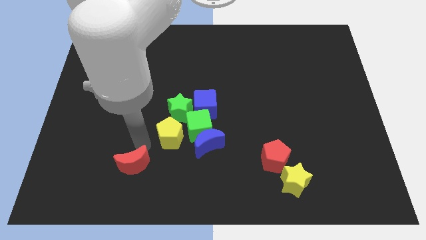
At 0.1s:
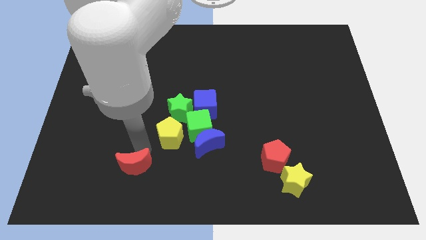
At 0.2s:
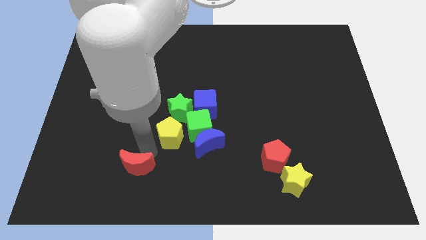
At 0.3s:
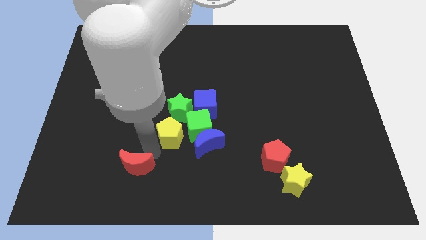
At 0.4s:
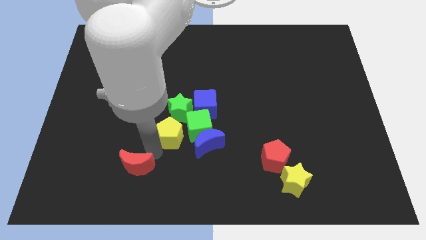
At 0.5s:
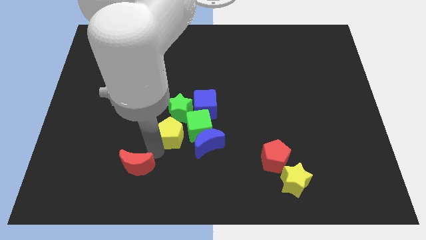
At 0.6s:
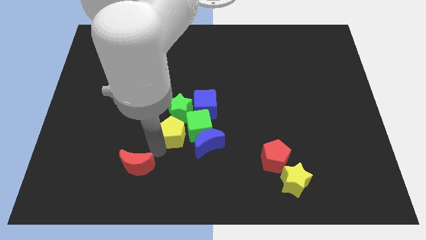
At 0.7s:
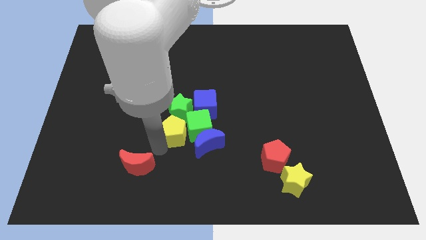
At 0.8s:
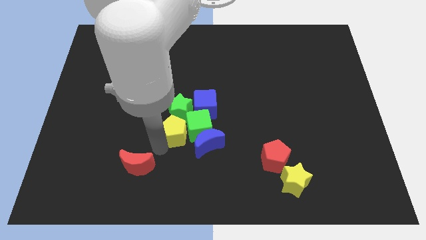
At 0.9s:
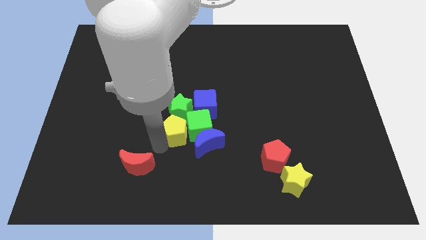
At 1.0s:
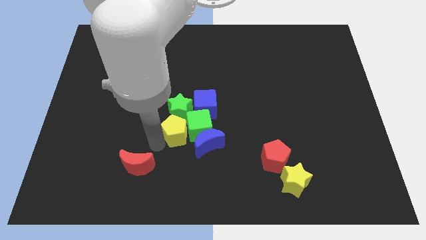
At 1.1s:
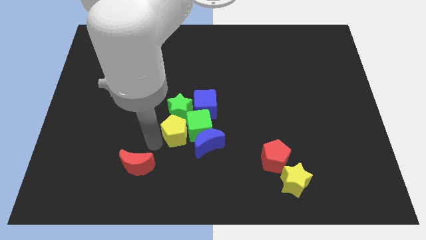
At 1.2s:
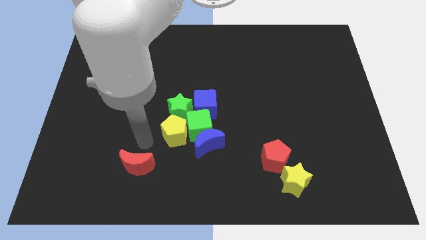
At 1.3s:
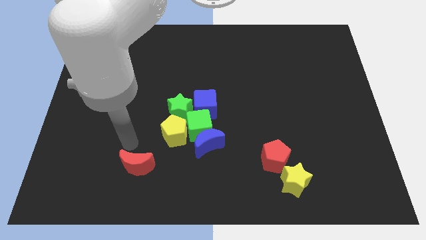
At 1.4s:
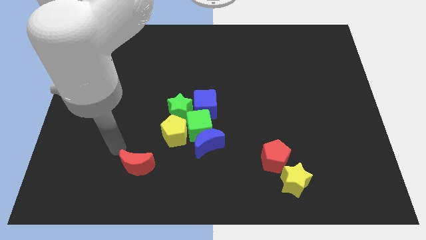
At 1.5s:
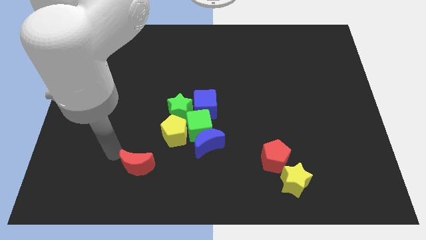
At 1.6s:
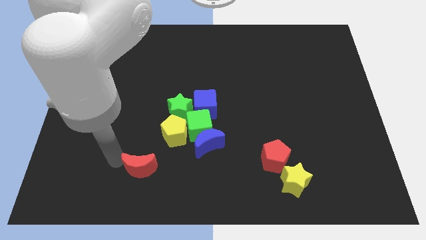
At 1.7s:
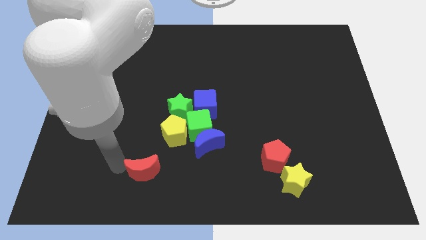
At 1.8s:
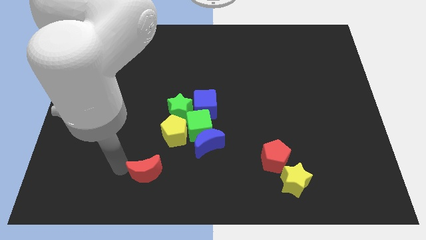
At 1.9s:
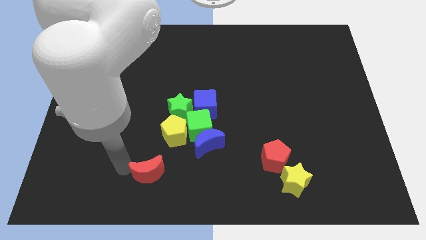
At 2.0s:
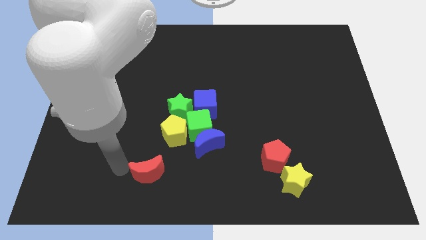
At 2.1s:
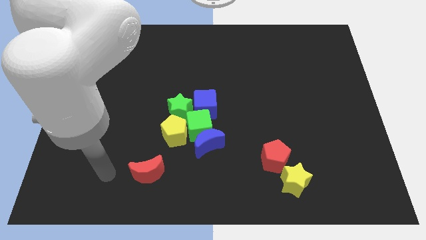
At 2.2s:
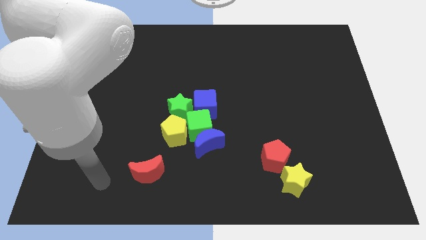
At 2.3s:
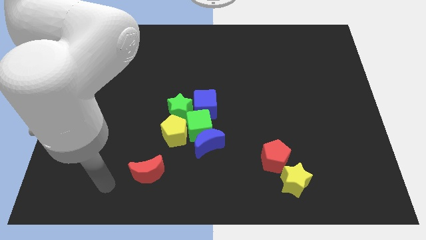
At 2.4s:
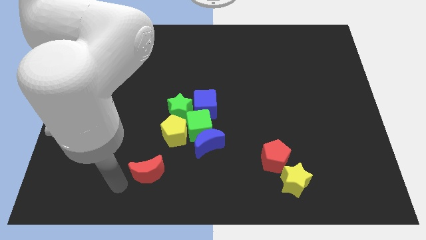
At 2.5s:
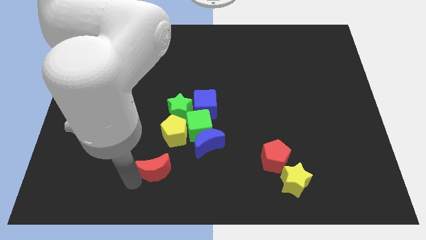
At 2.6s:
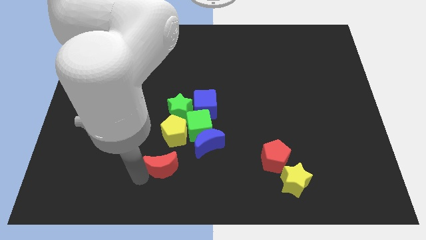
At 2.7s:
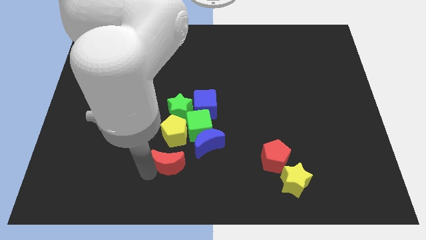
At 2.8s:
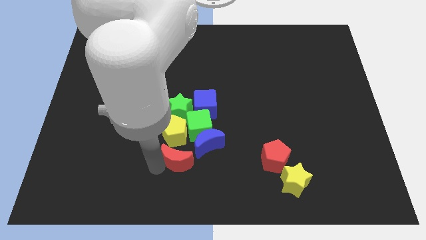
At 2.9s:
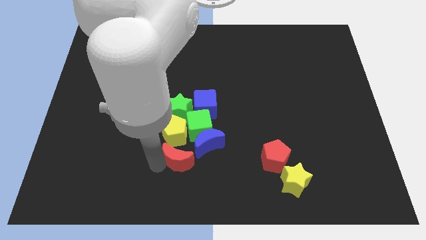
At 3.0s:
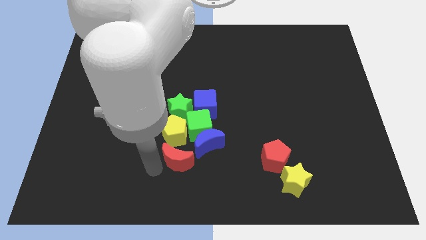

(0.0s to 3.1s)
move red moon below the yellow pentagon

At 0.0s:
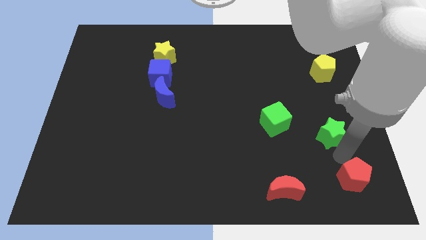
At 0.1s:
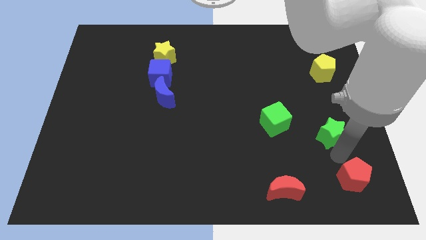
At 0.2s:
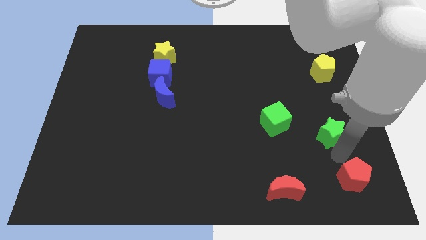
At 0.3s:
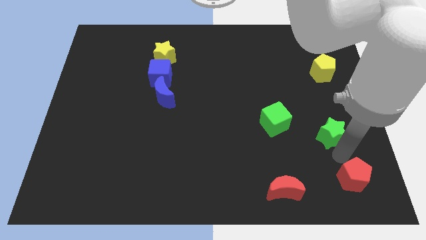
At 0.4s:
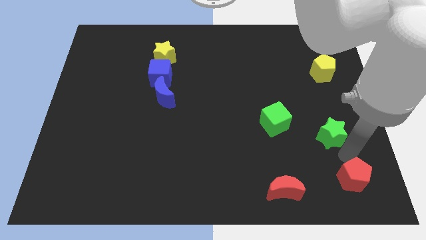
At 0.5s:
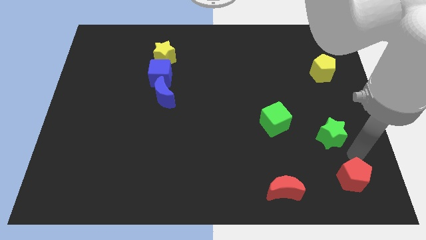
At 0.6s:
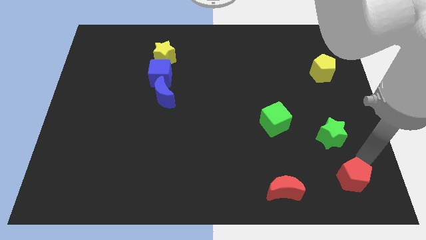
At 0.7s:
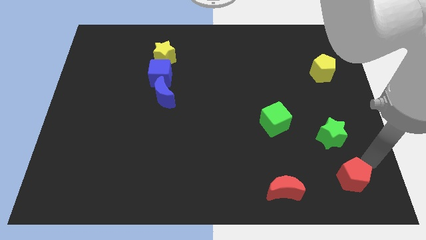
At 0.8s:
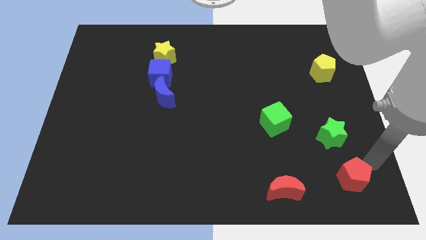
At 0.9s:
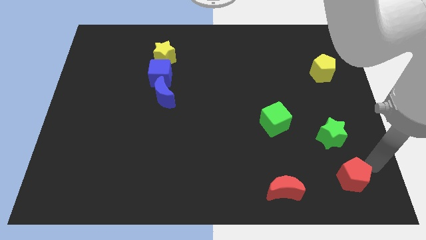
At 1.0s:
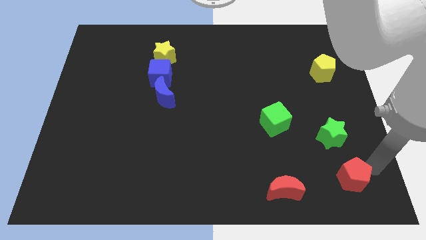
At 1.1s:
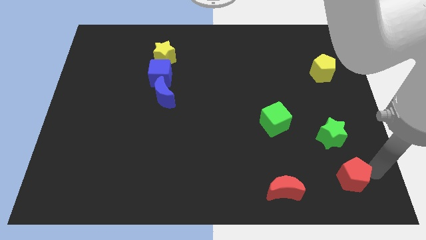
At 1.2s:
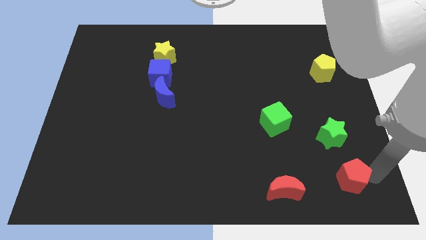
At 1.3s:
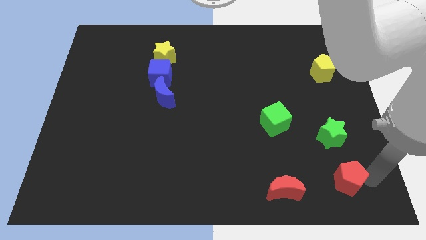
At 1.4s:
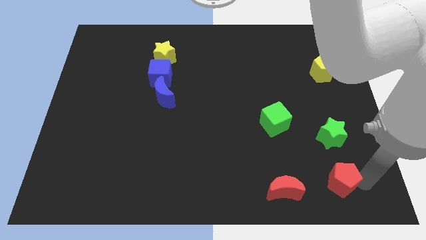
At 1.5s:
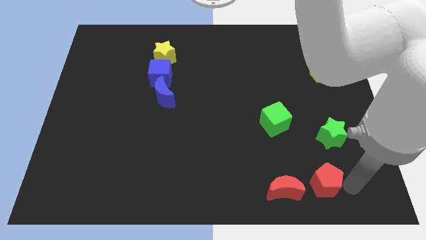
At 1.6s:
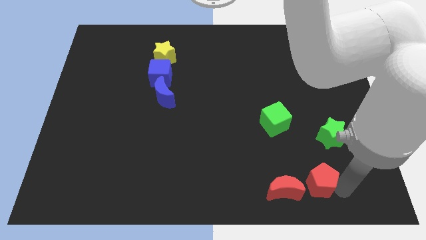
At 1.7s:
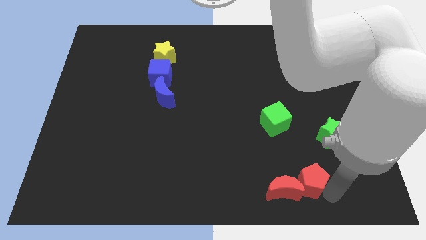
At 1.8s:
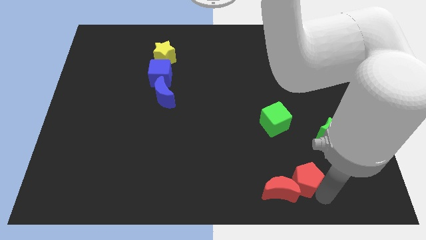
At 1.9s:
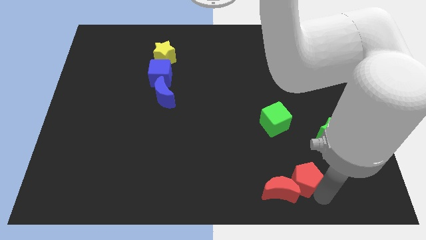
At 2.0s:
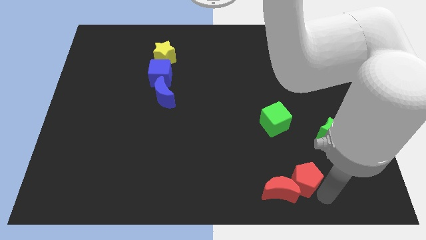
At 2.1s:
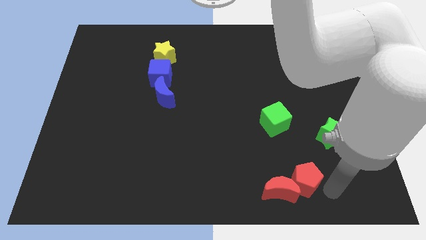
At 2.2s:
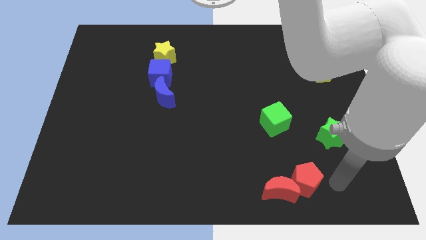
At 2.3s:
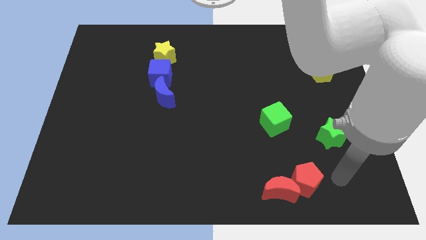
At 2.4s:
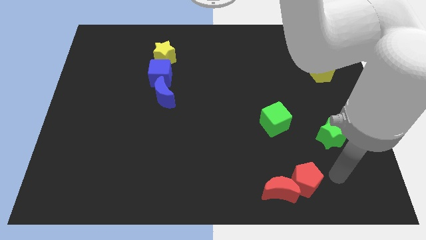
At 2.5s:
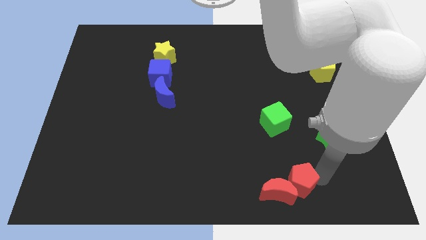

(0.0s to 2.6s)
push red pentagon into the red moon

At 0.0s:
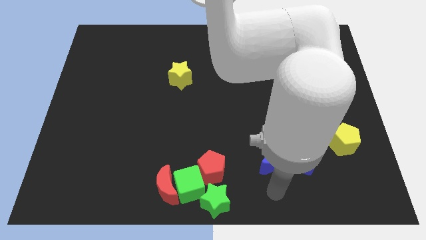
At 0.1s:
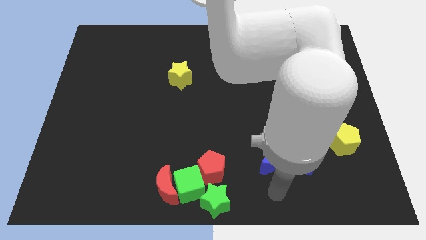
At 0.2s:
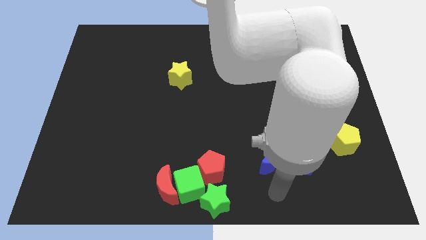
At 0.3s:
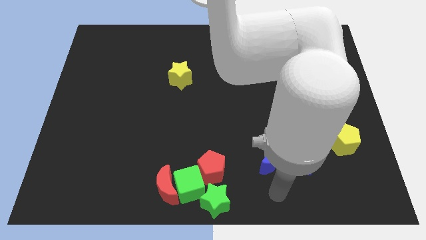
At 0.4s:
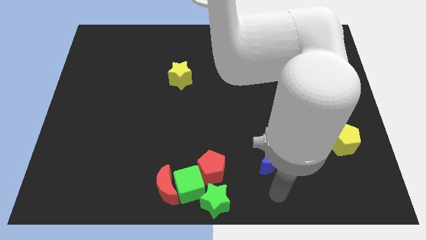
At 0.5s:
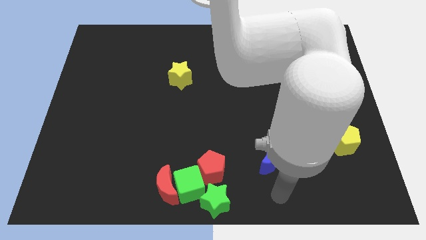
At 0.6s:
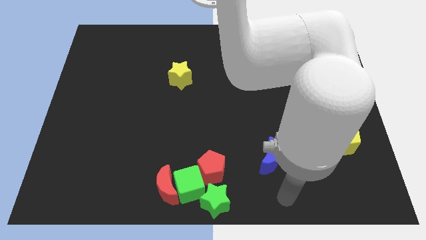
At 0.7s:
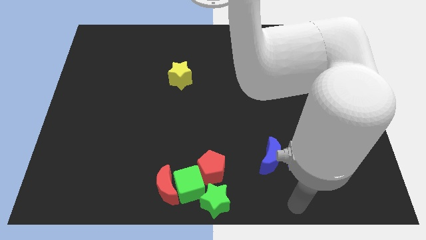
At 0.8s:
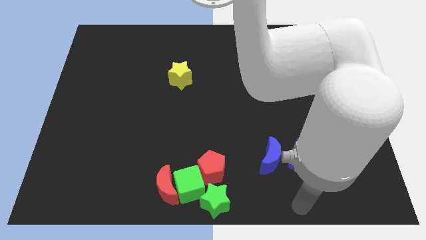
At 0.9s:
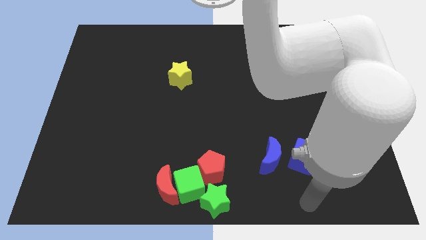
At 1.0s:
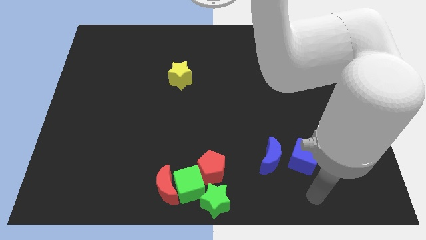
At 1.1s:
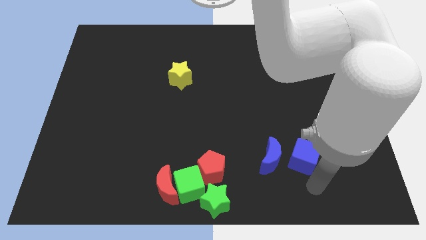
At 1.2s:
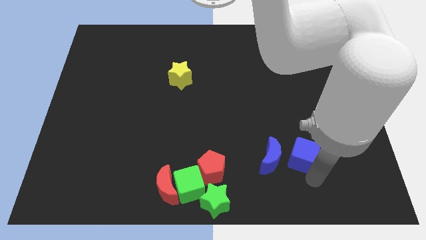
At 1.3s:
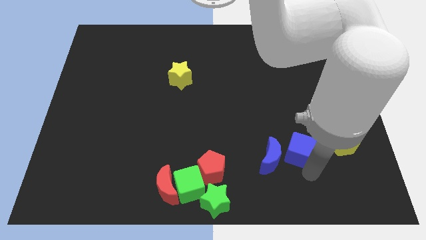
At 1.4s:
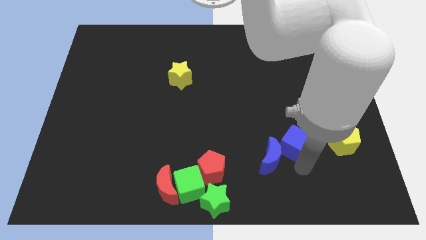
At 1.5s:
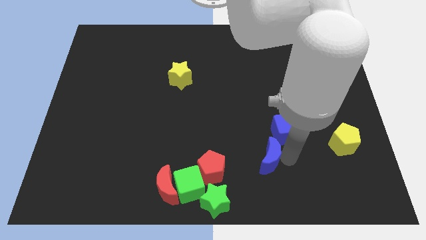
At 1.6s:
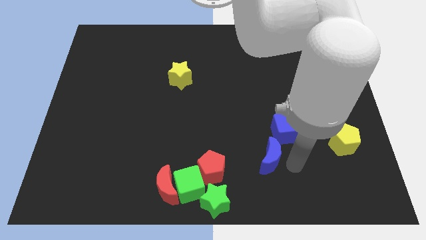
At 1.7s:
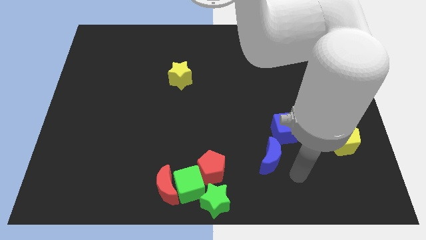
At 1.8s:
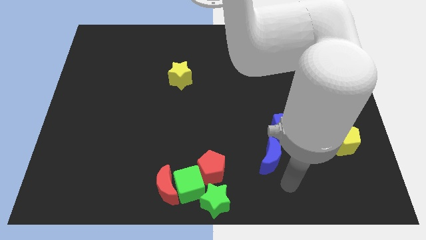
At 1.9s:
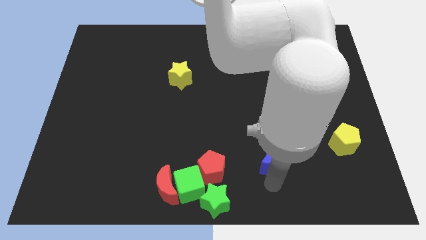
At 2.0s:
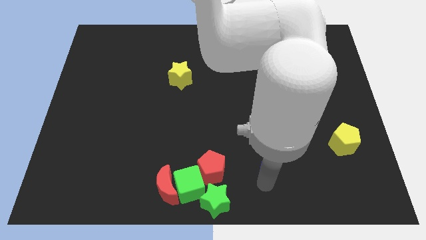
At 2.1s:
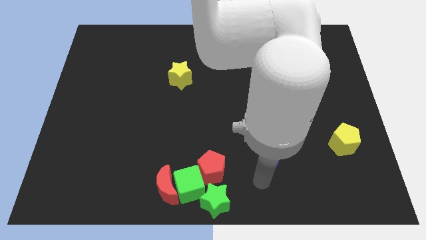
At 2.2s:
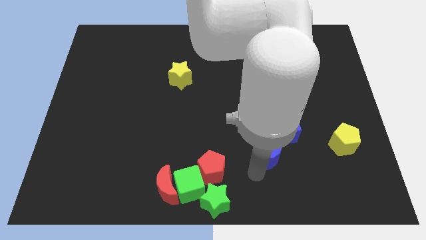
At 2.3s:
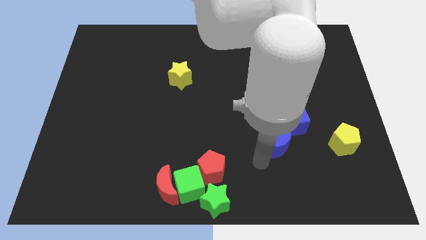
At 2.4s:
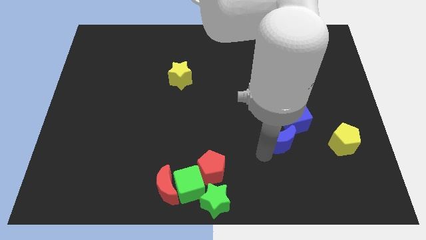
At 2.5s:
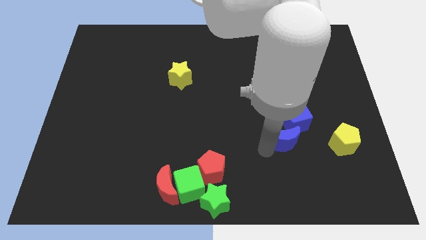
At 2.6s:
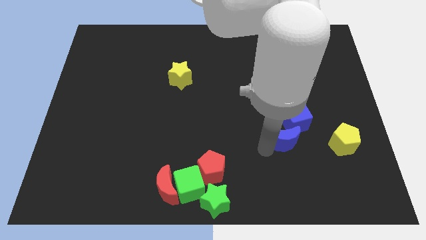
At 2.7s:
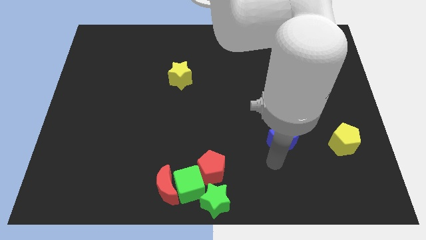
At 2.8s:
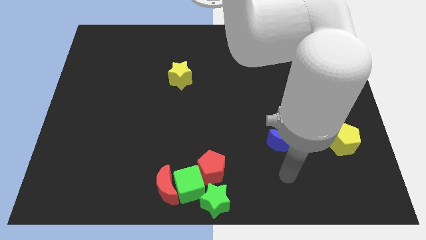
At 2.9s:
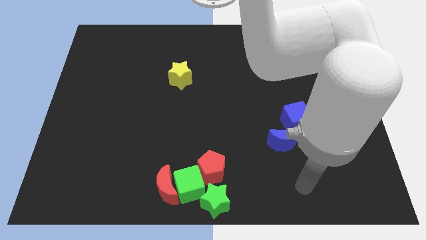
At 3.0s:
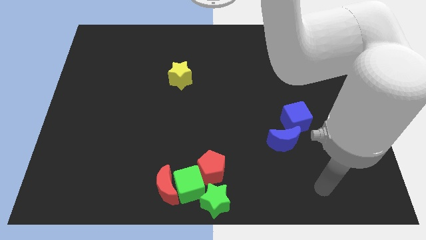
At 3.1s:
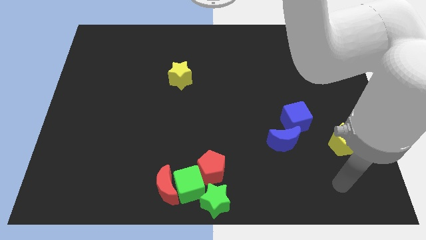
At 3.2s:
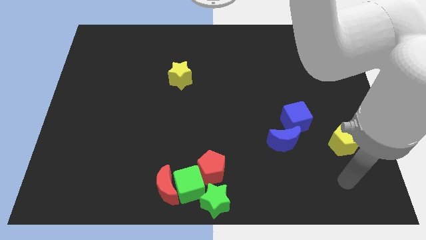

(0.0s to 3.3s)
move the group of blue blocks in between the yellow star and yellow pentagon

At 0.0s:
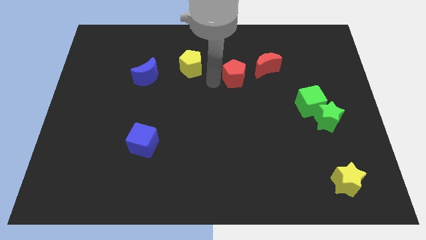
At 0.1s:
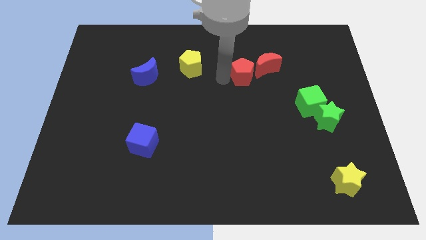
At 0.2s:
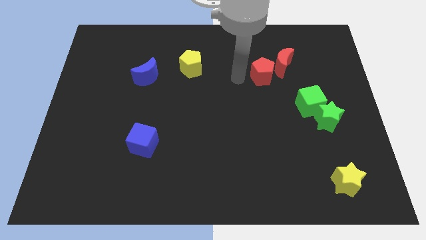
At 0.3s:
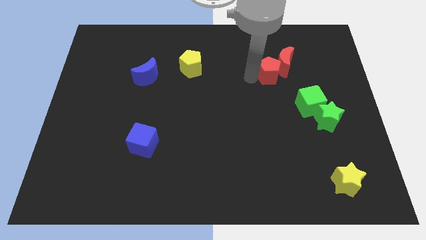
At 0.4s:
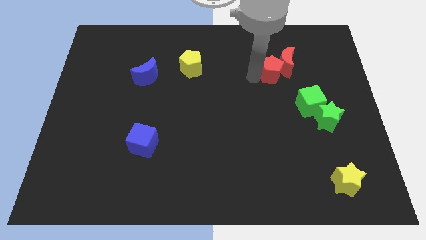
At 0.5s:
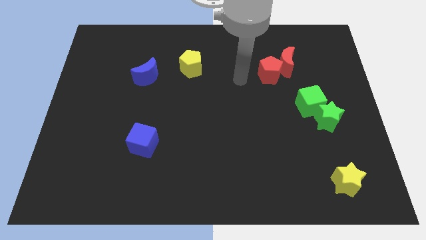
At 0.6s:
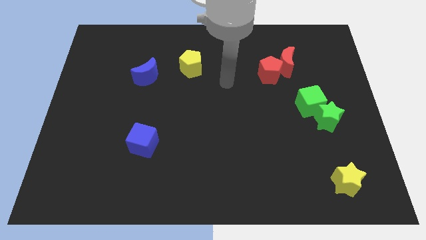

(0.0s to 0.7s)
push the red blocks slightly to the right
